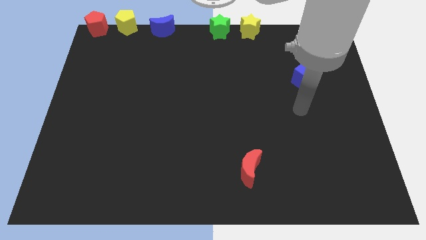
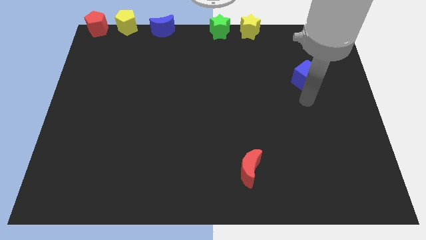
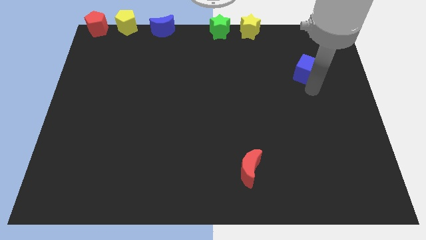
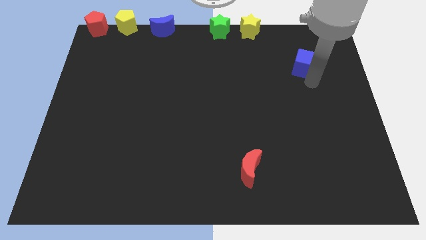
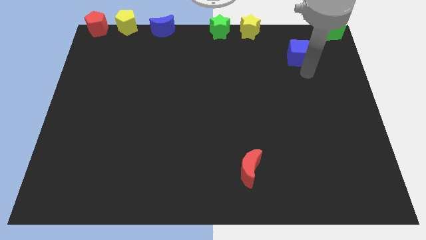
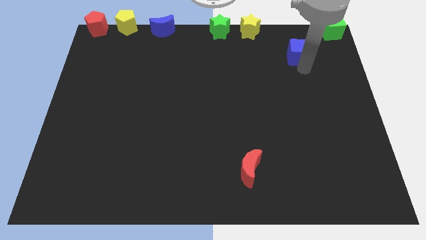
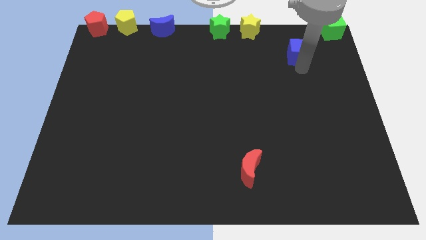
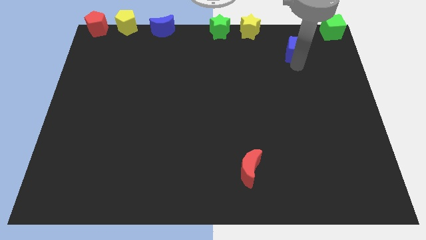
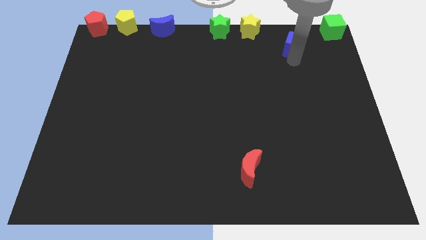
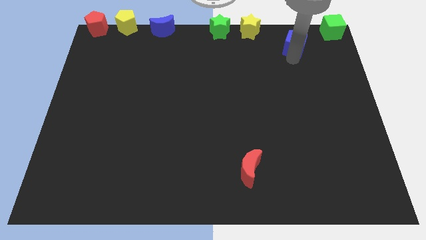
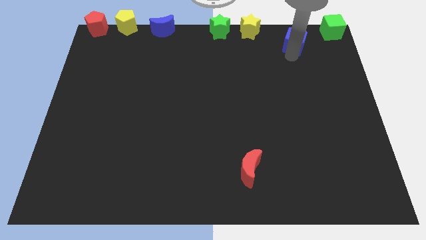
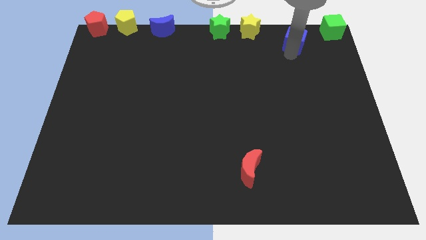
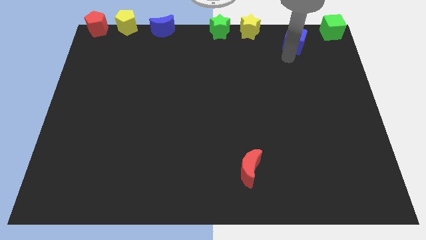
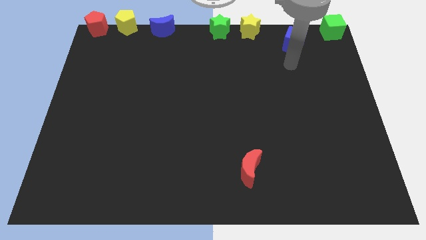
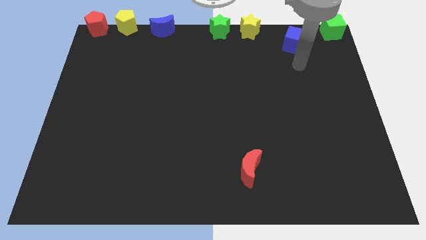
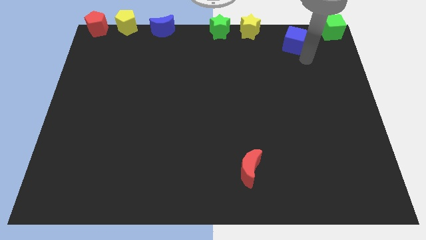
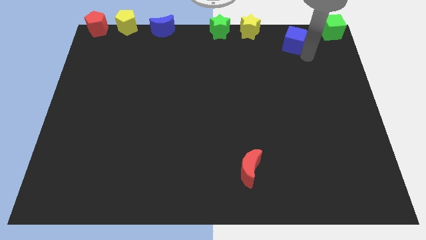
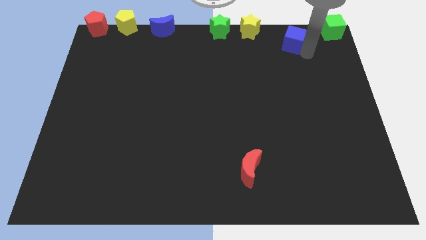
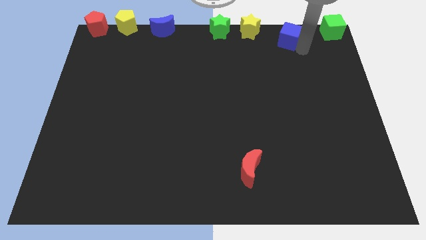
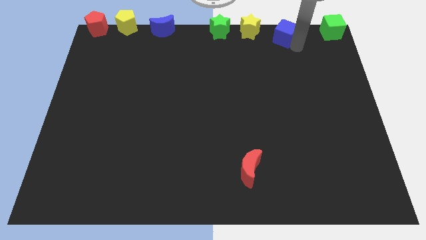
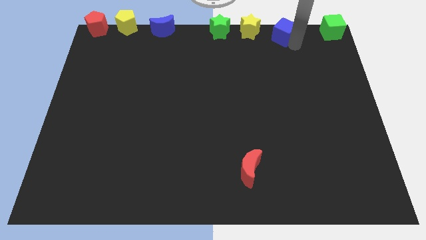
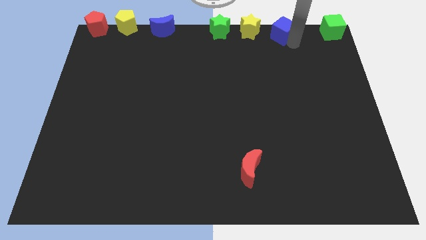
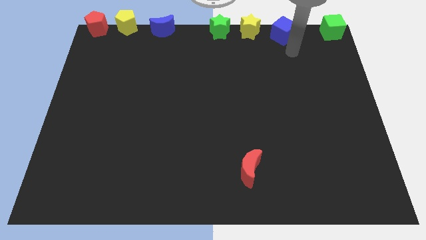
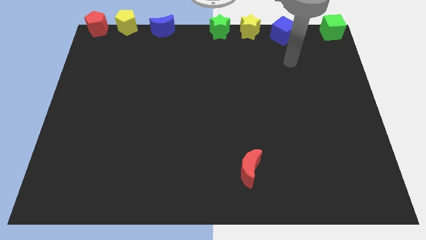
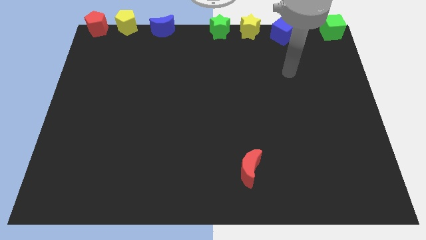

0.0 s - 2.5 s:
place the blue cube to the right of yellow star

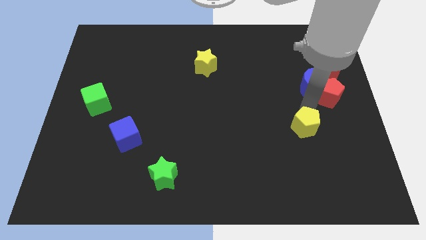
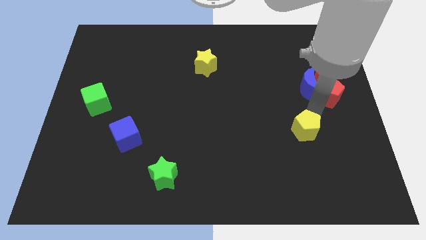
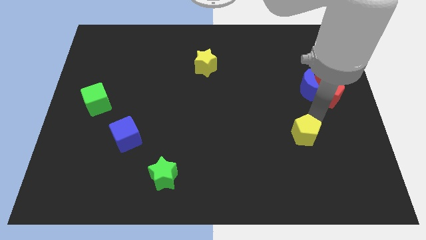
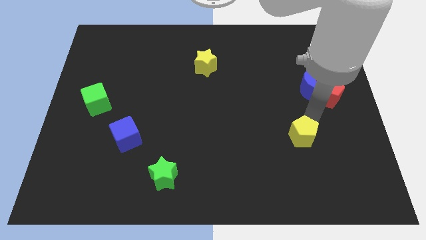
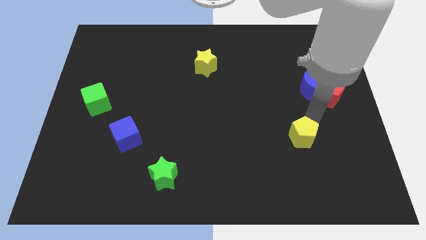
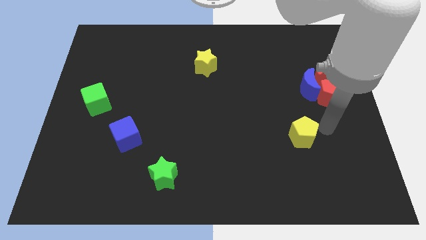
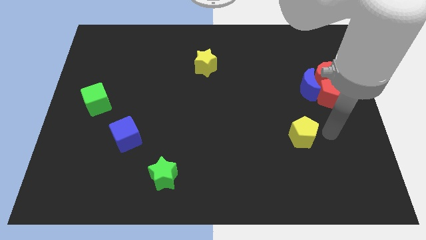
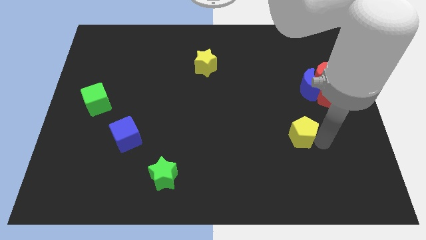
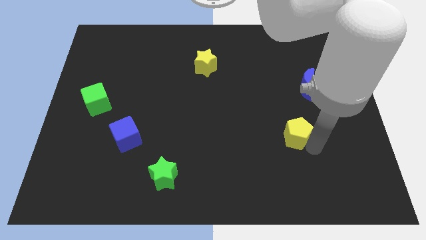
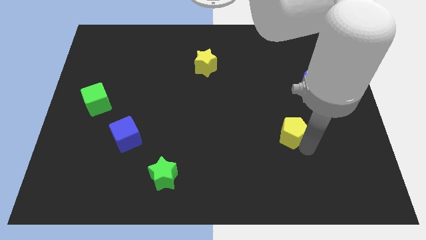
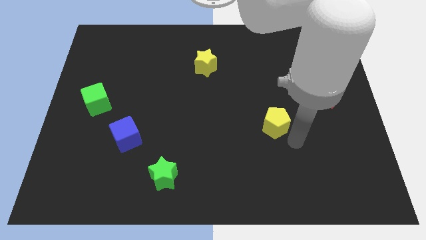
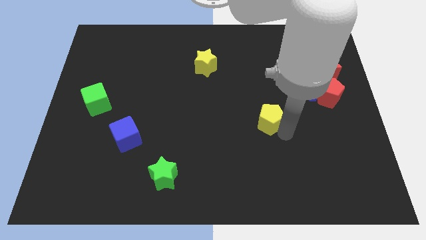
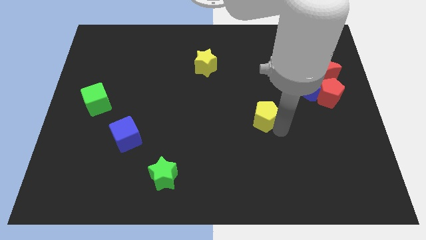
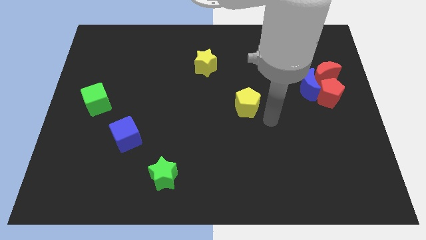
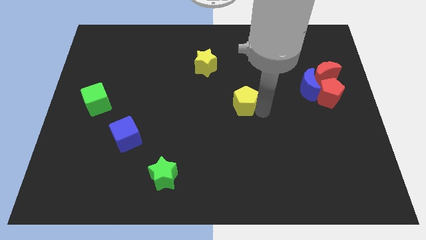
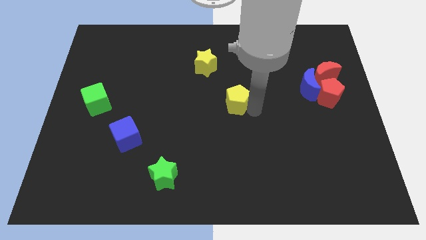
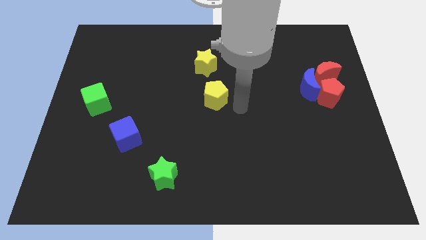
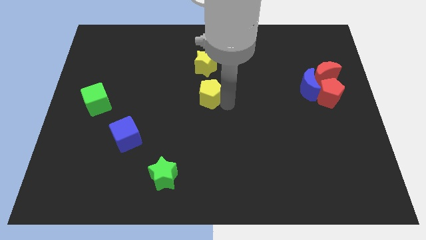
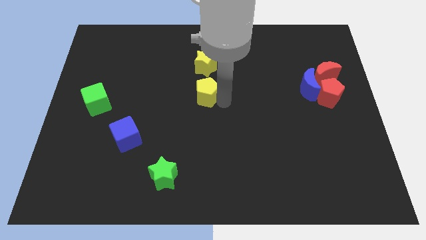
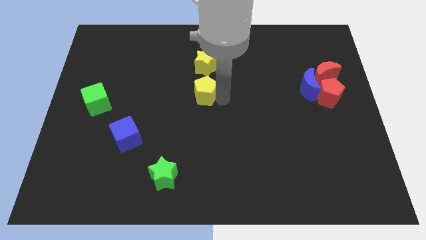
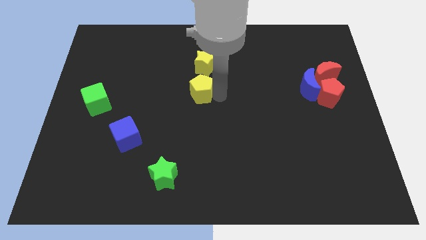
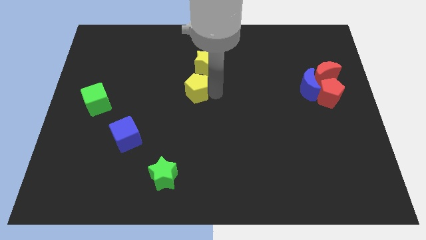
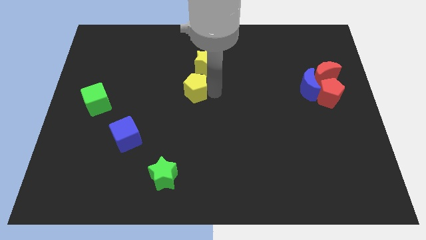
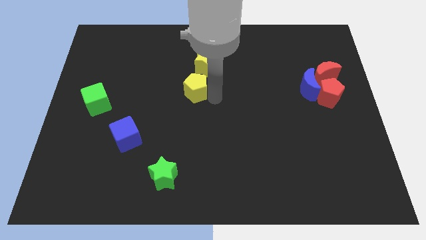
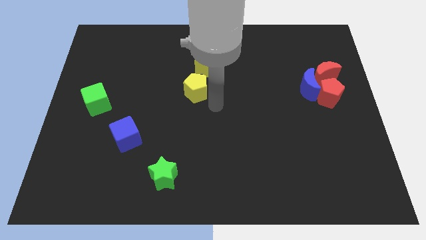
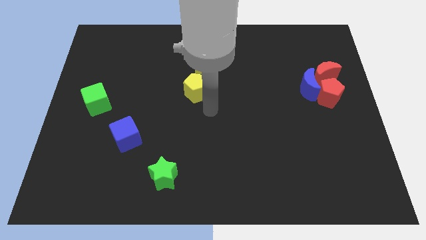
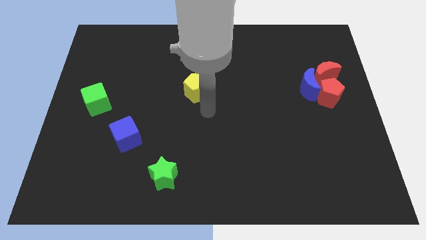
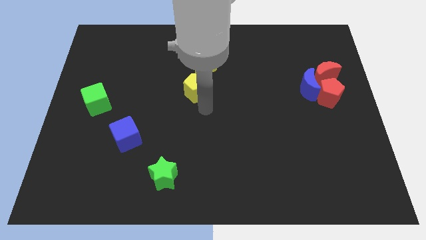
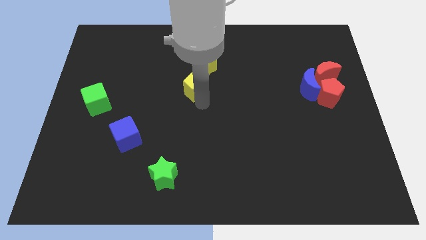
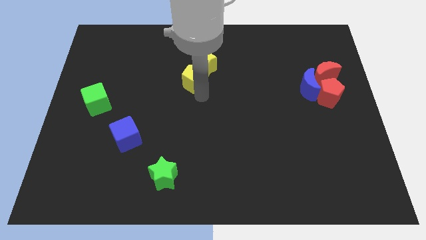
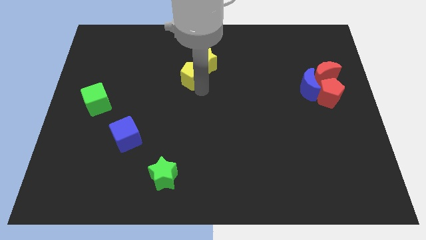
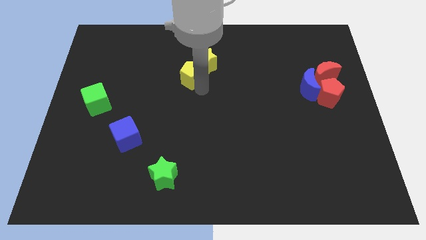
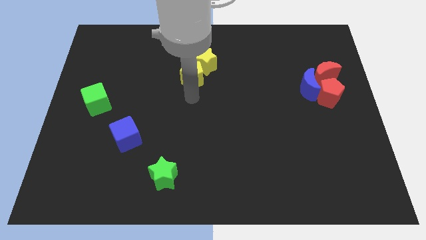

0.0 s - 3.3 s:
move the yellow pentagon into the yellow star

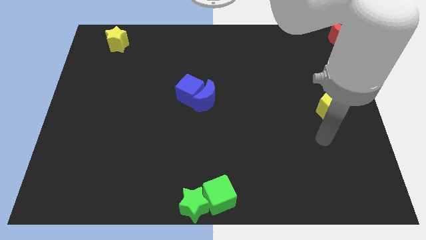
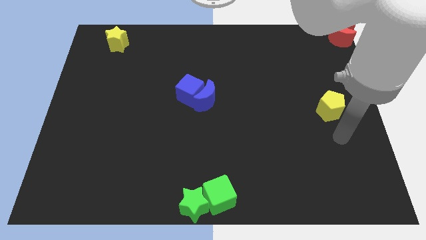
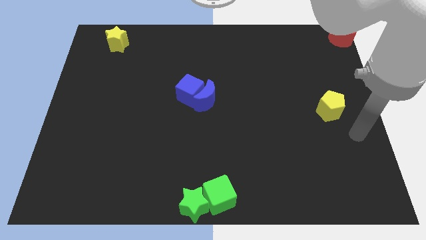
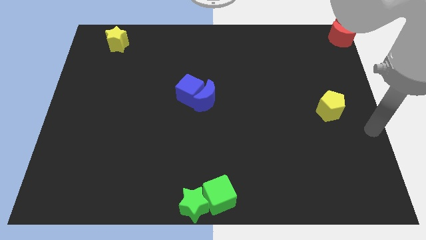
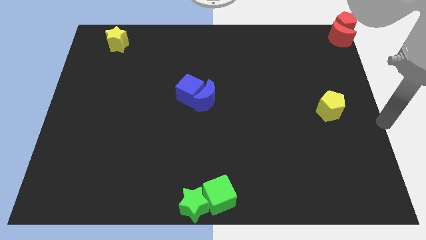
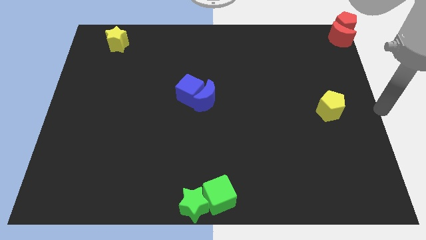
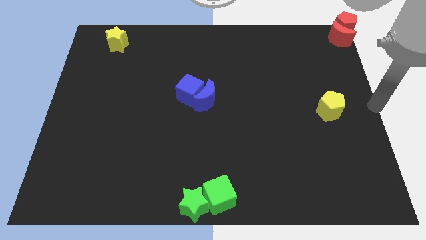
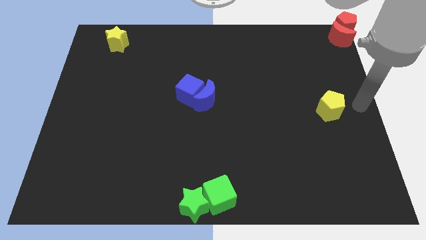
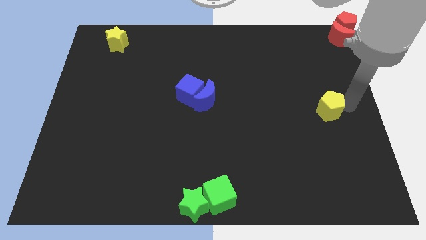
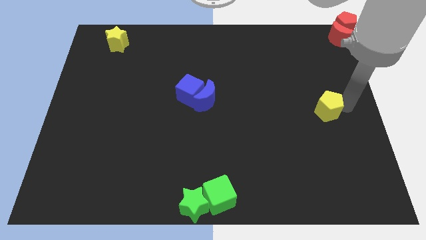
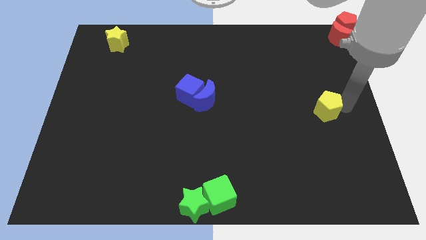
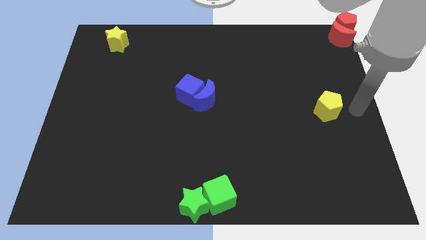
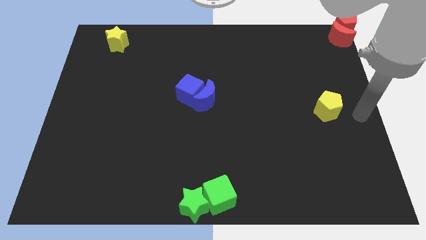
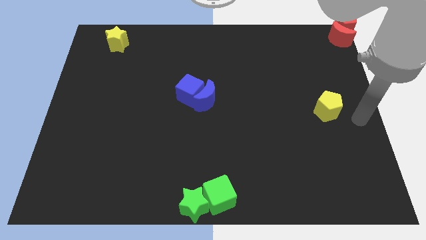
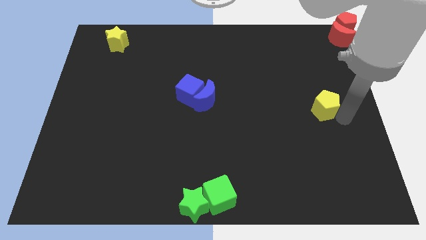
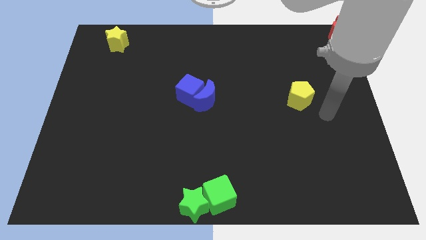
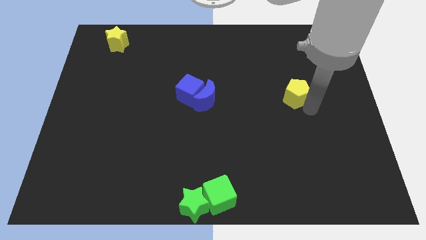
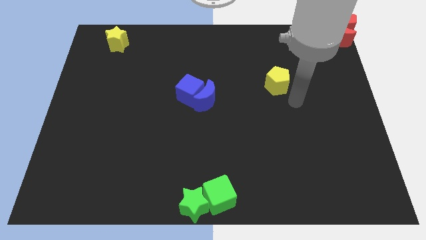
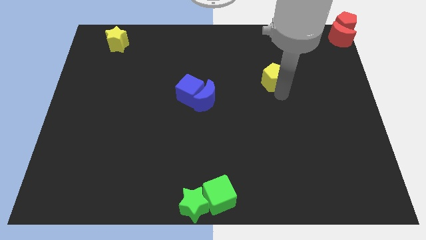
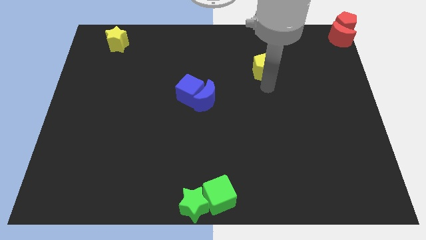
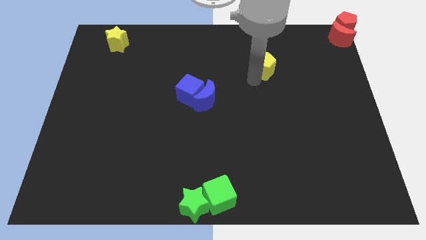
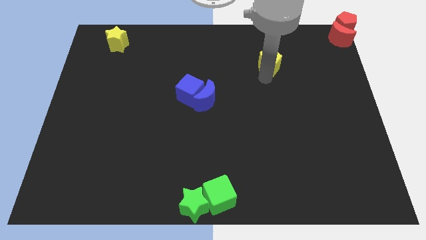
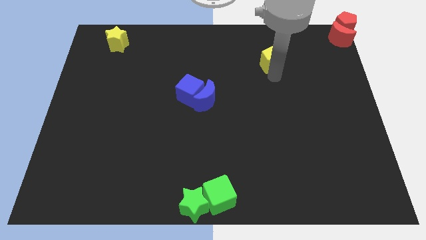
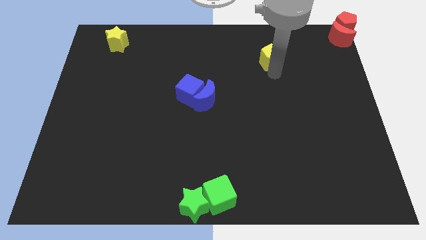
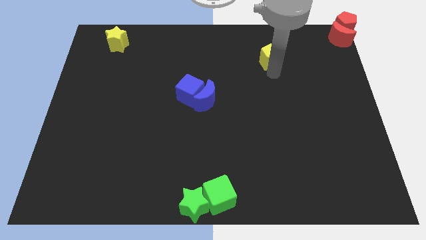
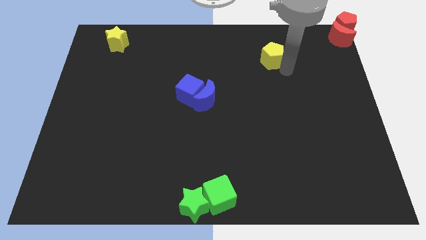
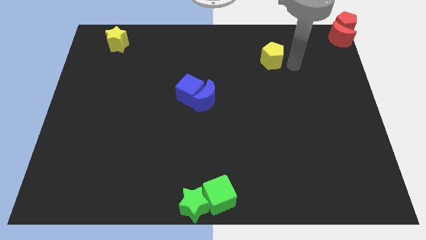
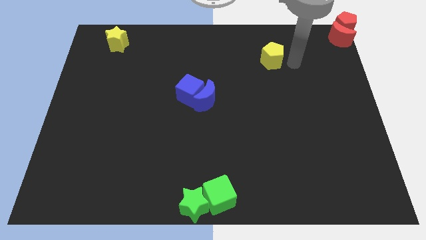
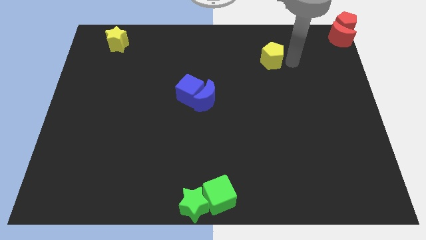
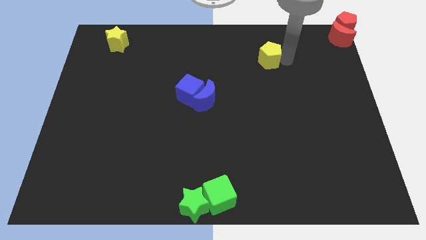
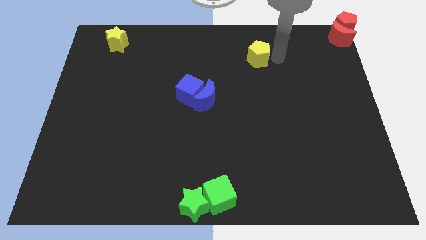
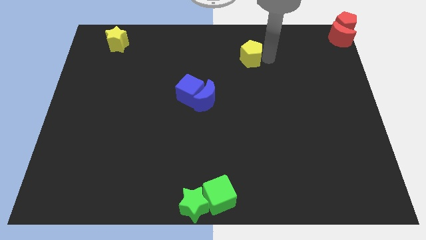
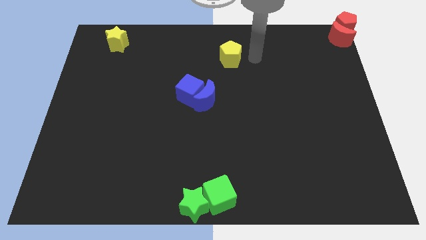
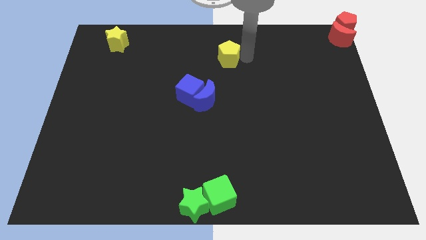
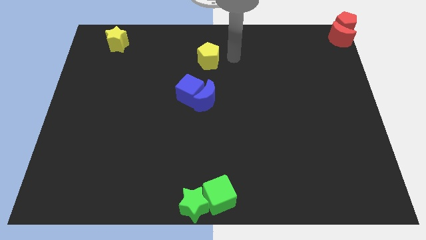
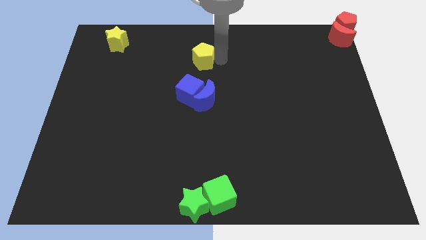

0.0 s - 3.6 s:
push the yellow pentagon parallel to the blue cube
